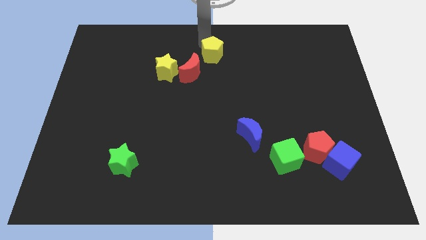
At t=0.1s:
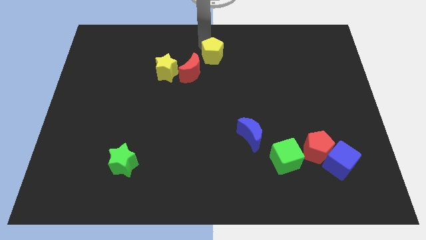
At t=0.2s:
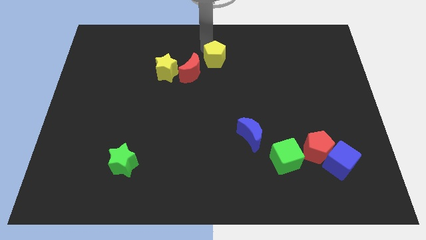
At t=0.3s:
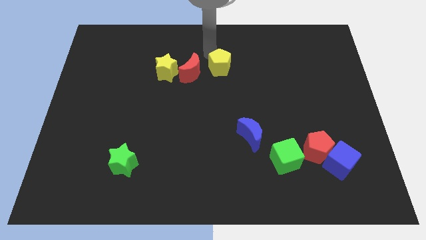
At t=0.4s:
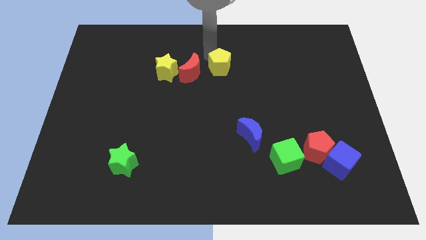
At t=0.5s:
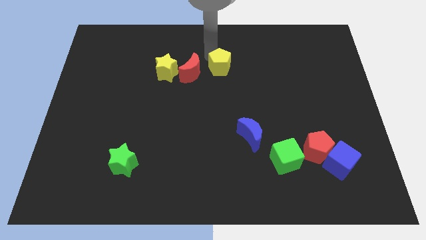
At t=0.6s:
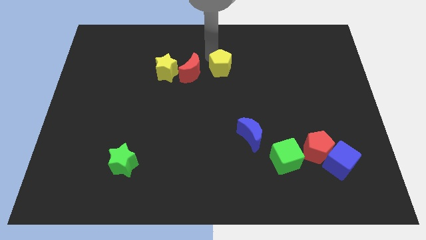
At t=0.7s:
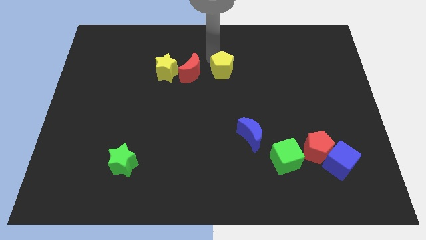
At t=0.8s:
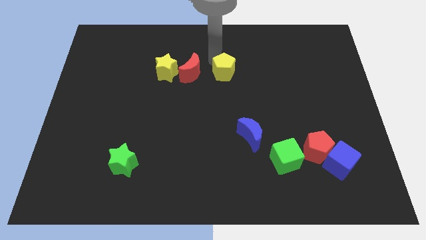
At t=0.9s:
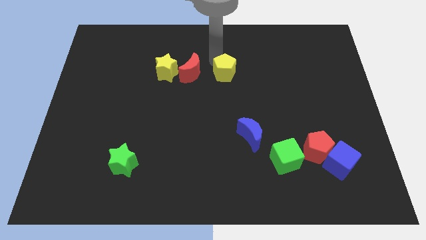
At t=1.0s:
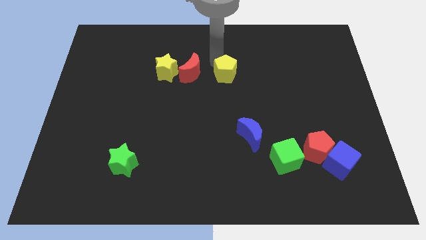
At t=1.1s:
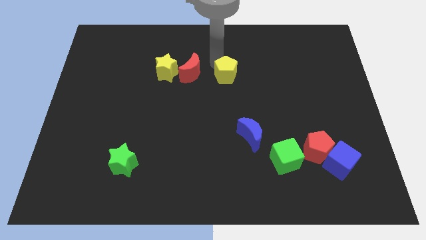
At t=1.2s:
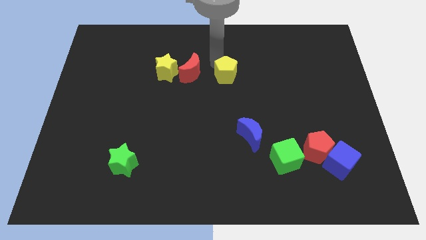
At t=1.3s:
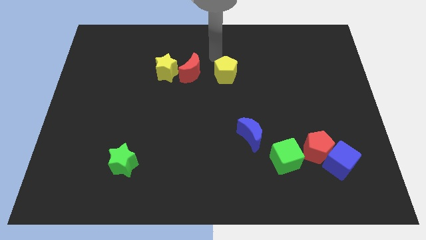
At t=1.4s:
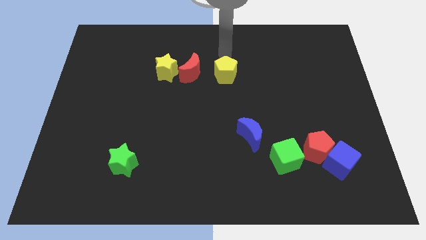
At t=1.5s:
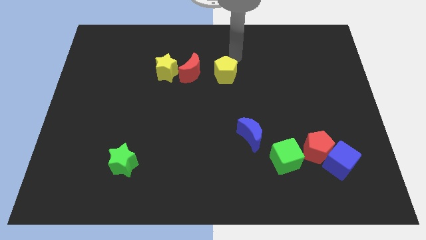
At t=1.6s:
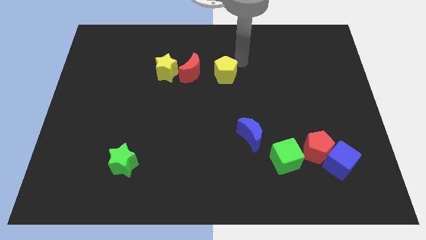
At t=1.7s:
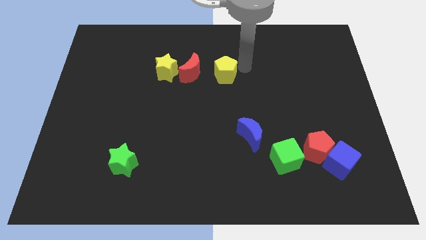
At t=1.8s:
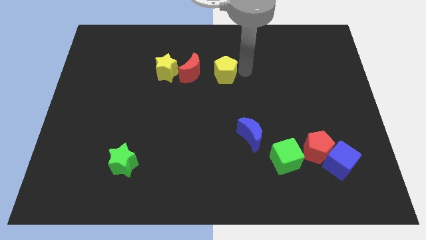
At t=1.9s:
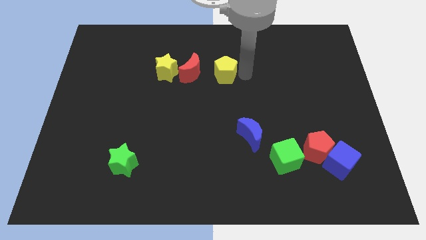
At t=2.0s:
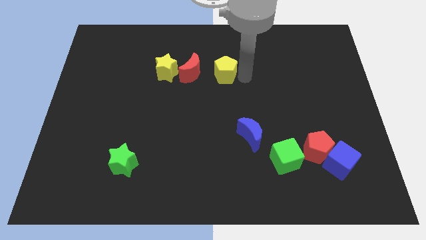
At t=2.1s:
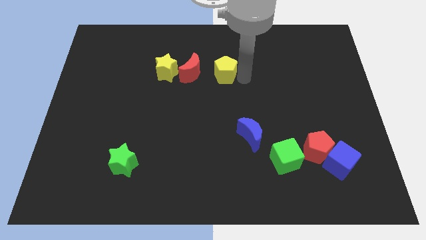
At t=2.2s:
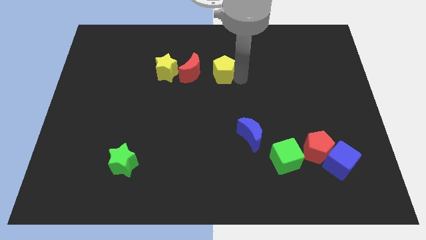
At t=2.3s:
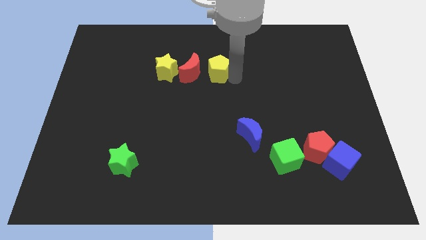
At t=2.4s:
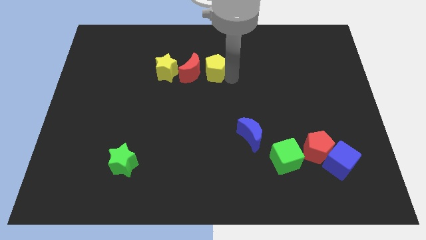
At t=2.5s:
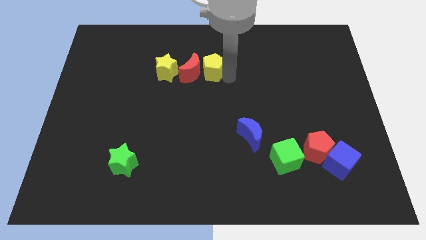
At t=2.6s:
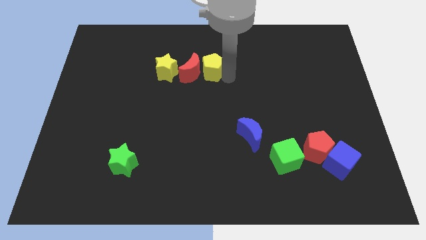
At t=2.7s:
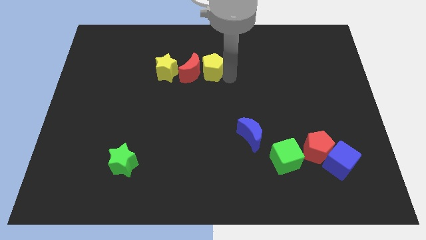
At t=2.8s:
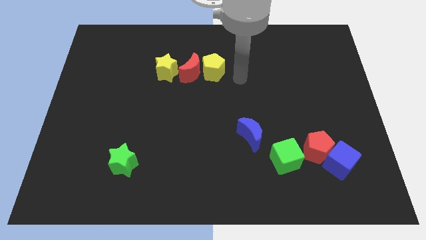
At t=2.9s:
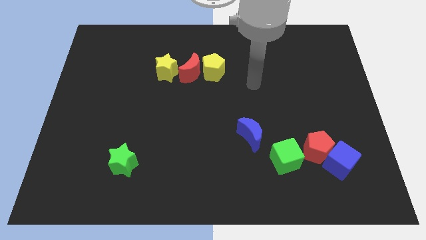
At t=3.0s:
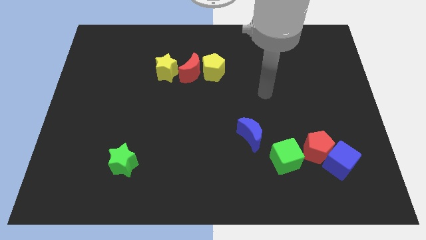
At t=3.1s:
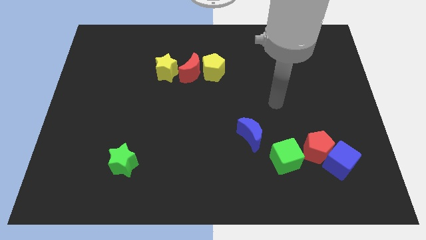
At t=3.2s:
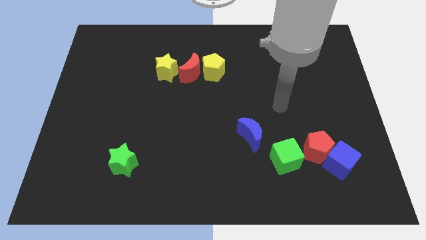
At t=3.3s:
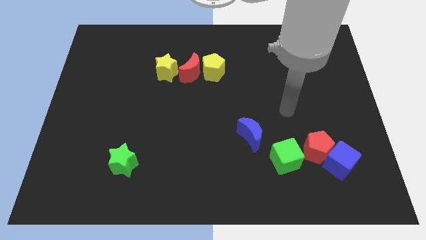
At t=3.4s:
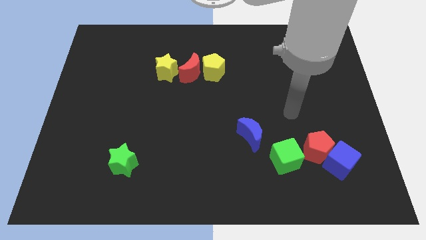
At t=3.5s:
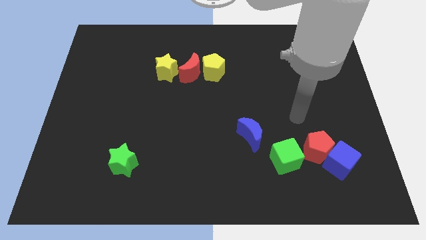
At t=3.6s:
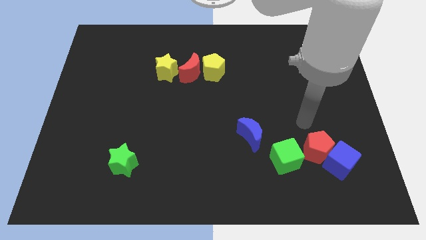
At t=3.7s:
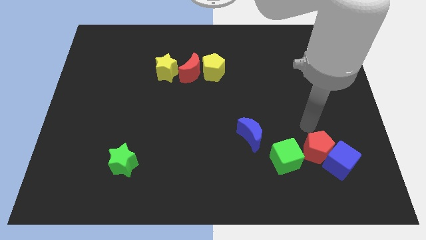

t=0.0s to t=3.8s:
move the yellow pentagon closely to the red moon

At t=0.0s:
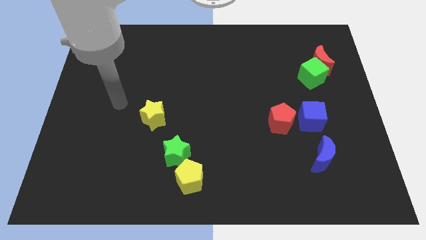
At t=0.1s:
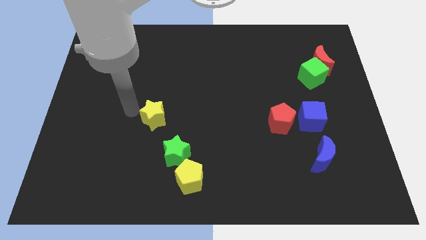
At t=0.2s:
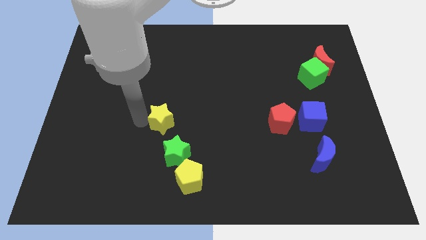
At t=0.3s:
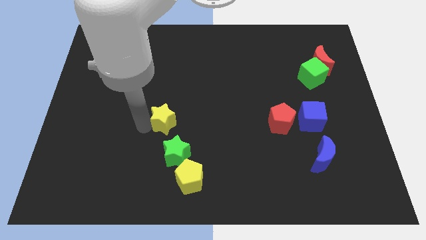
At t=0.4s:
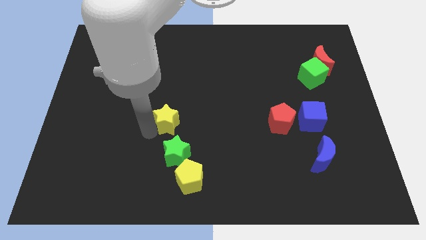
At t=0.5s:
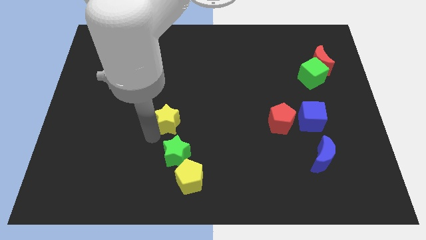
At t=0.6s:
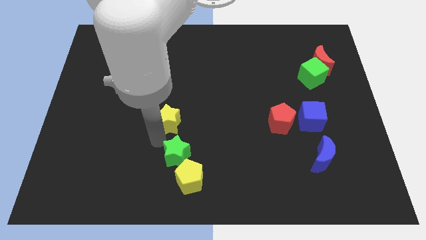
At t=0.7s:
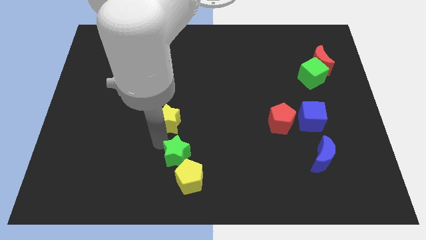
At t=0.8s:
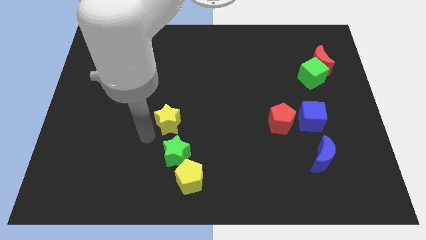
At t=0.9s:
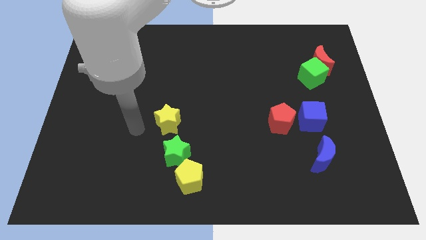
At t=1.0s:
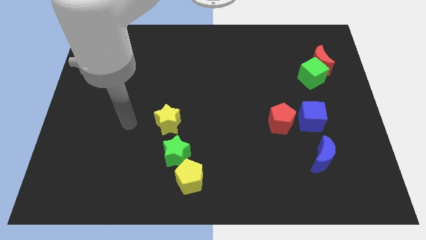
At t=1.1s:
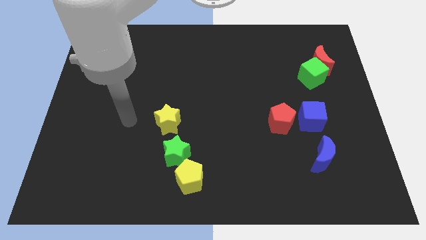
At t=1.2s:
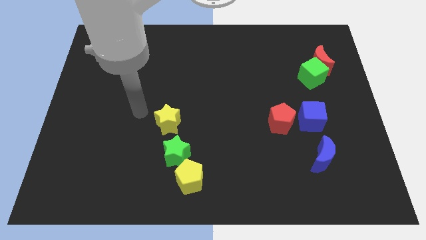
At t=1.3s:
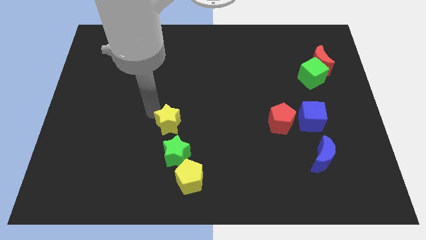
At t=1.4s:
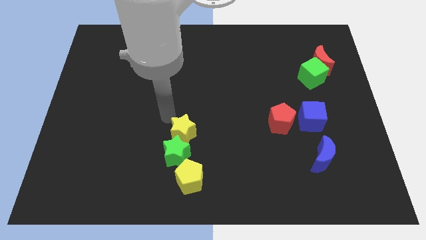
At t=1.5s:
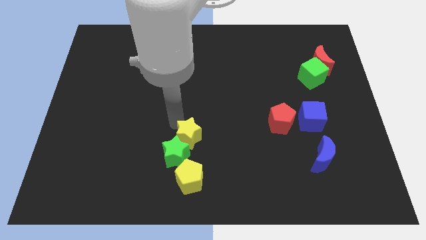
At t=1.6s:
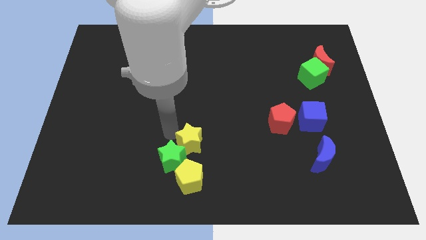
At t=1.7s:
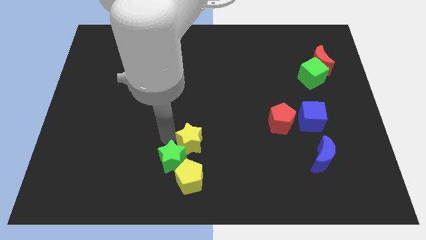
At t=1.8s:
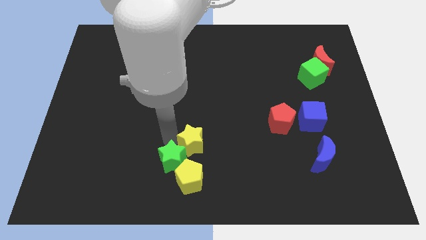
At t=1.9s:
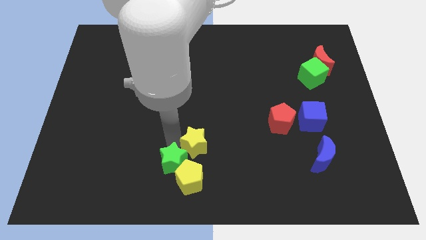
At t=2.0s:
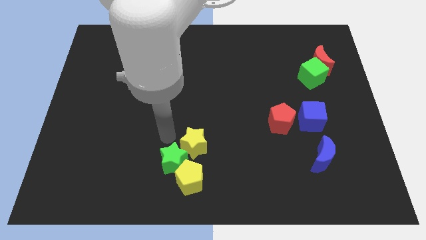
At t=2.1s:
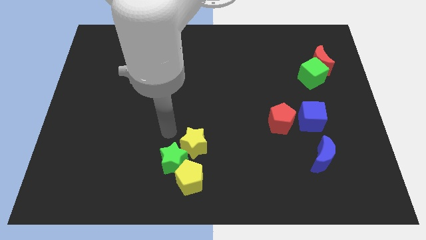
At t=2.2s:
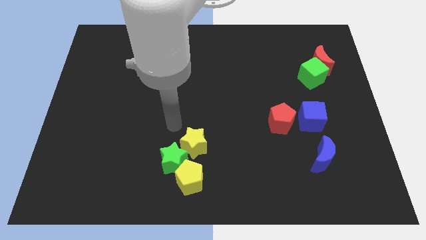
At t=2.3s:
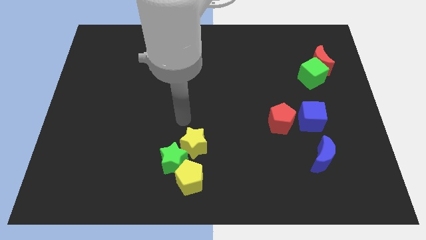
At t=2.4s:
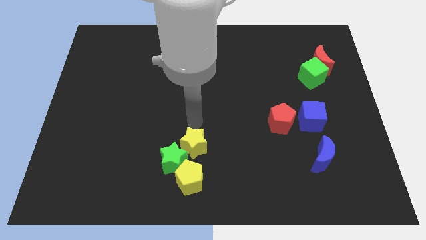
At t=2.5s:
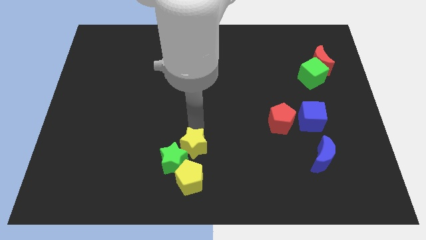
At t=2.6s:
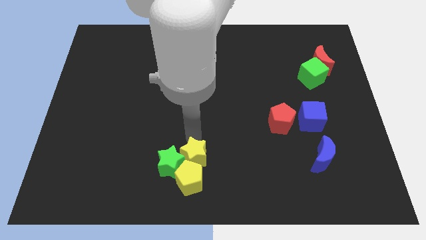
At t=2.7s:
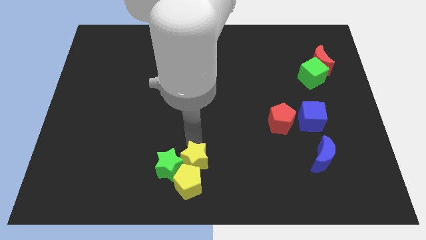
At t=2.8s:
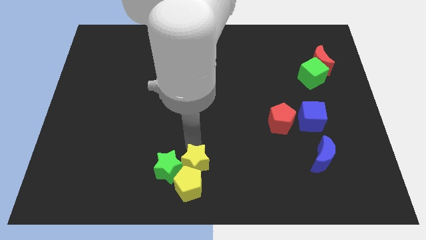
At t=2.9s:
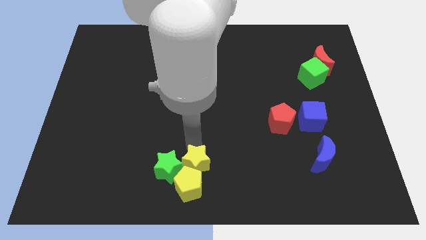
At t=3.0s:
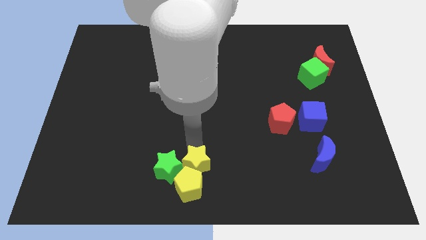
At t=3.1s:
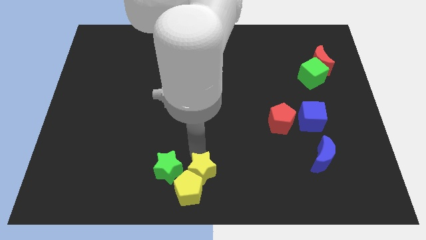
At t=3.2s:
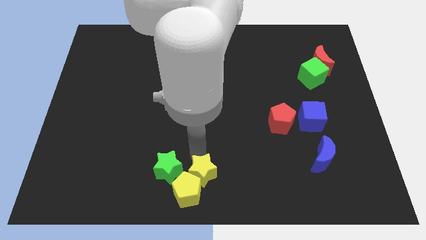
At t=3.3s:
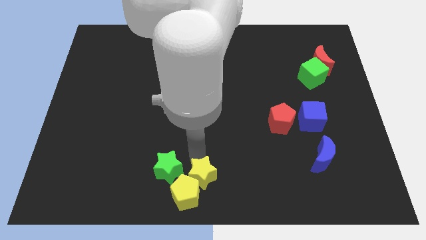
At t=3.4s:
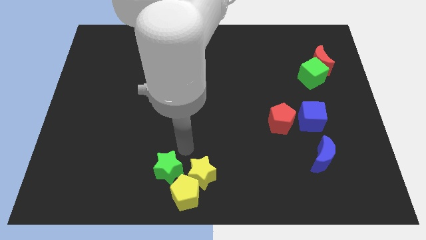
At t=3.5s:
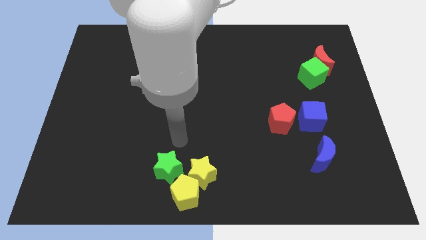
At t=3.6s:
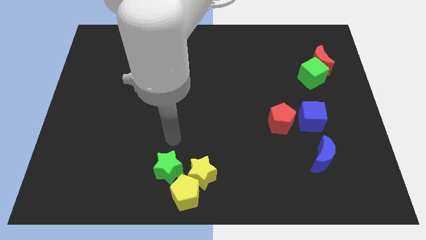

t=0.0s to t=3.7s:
group up the yellow block at the bottom center of the board

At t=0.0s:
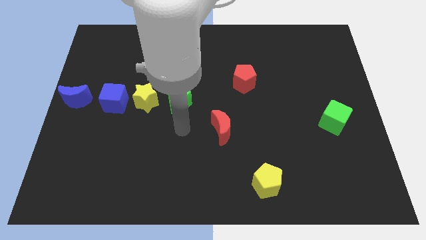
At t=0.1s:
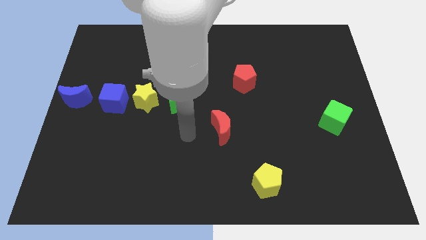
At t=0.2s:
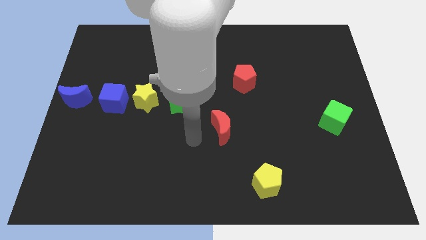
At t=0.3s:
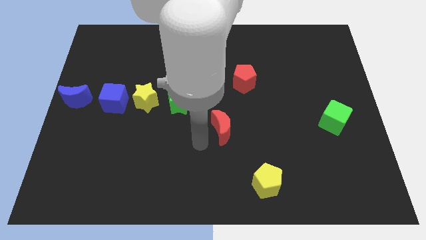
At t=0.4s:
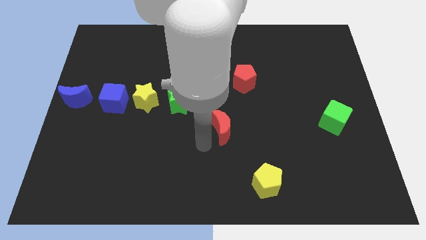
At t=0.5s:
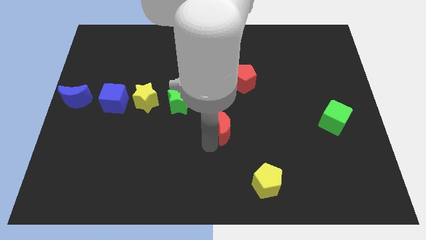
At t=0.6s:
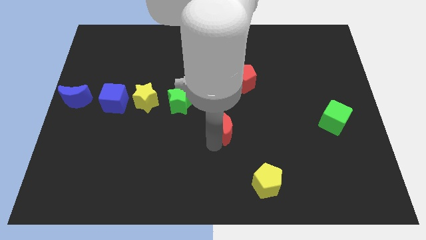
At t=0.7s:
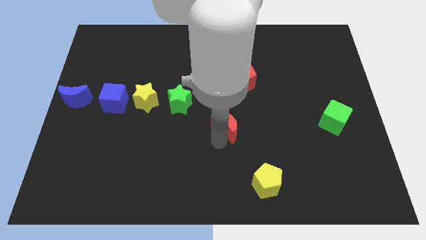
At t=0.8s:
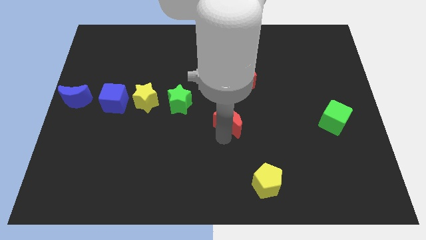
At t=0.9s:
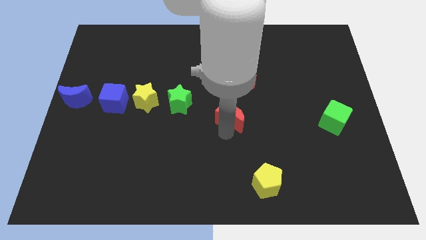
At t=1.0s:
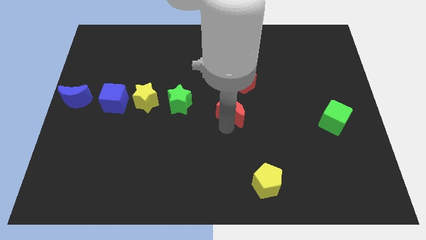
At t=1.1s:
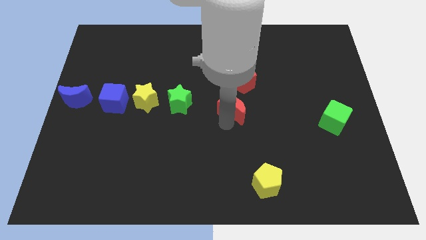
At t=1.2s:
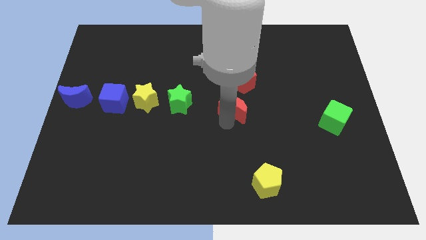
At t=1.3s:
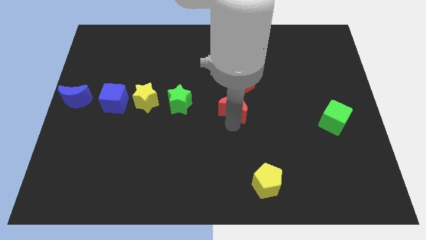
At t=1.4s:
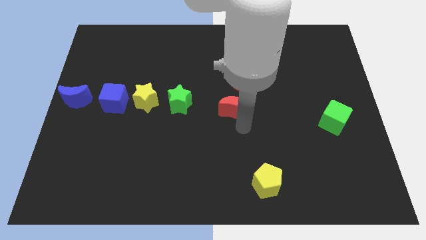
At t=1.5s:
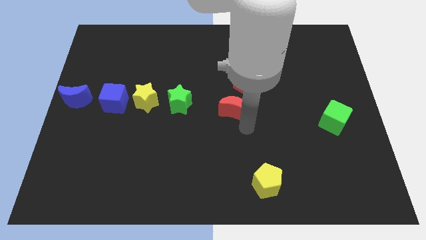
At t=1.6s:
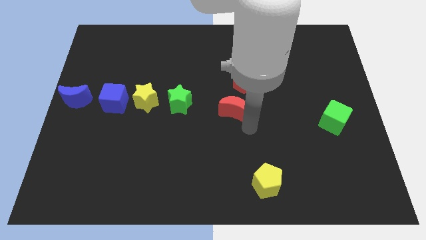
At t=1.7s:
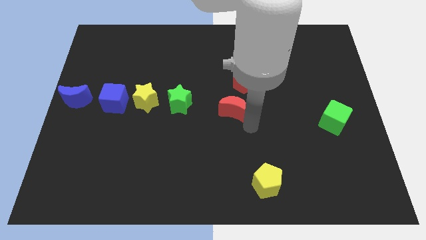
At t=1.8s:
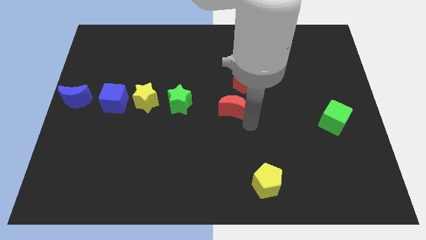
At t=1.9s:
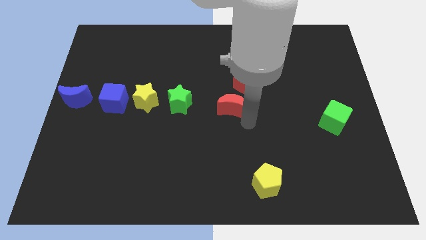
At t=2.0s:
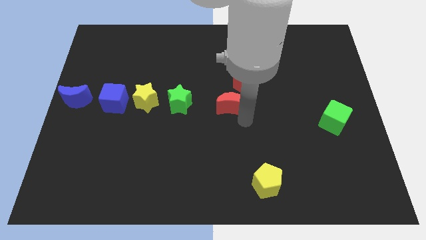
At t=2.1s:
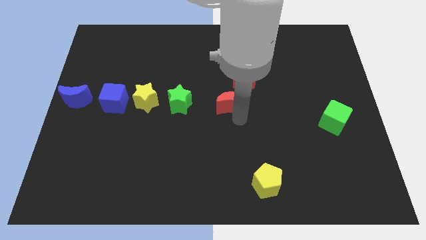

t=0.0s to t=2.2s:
place the red crescent at the center of the board
